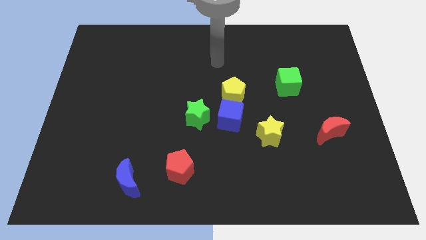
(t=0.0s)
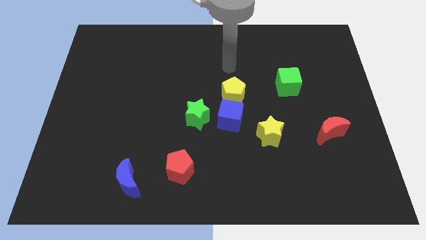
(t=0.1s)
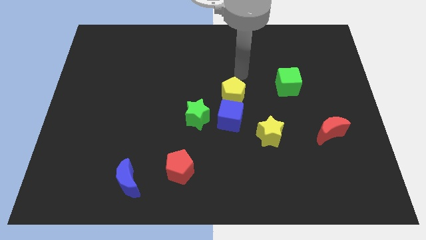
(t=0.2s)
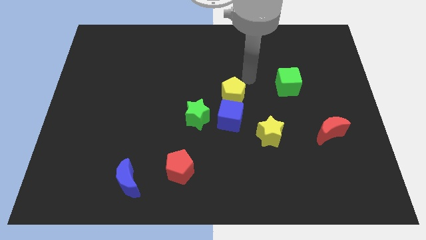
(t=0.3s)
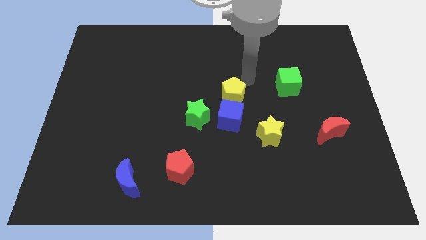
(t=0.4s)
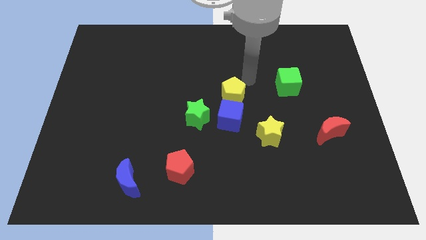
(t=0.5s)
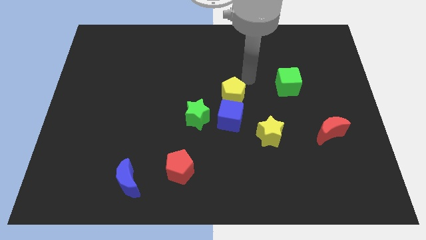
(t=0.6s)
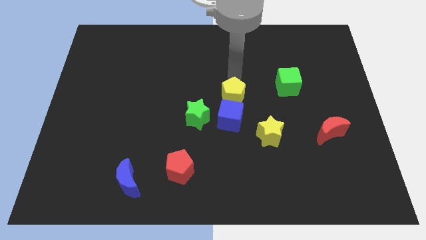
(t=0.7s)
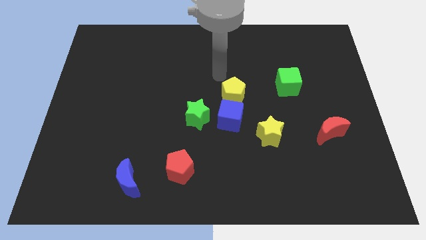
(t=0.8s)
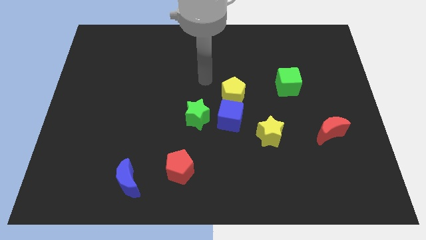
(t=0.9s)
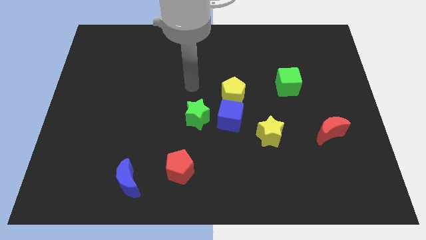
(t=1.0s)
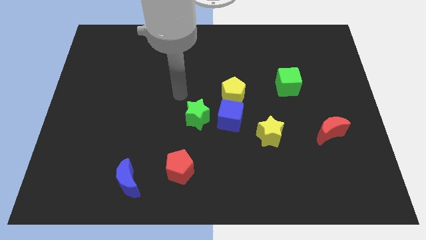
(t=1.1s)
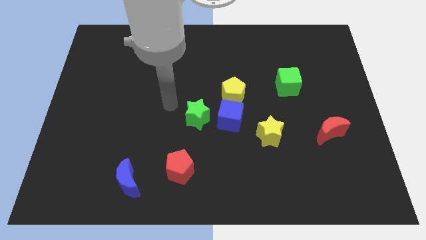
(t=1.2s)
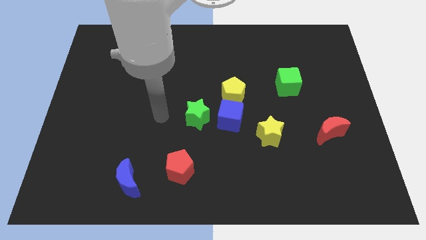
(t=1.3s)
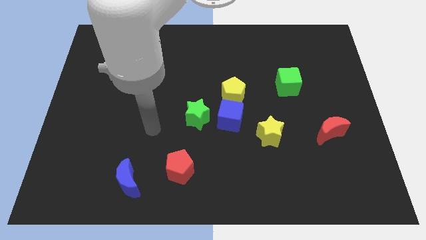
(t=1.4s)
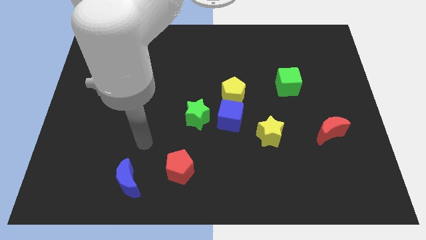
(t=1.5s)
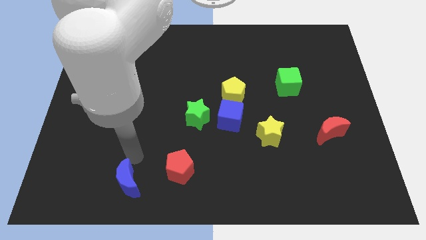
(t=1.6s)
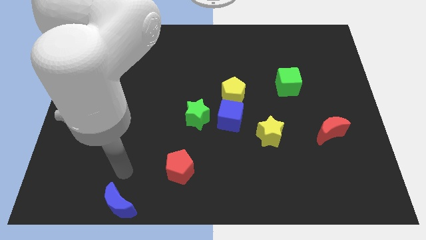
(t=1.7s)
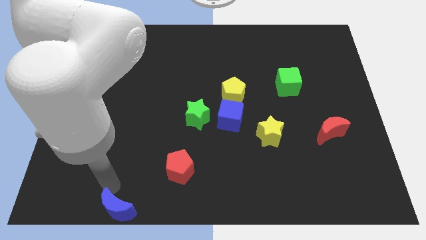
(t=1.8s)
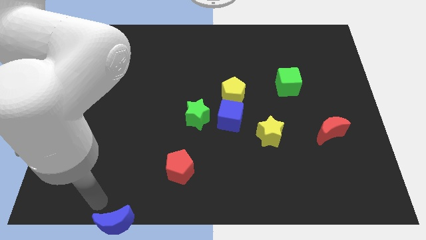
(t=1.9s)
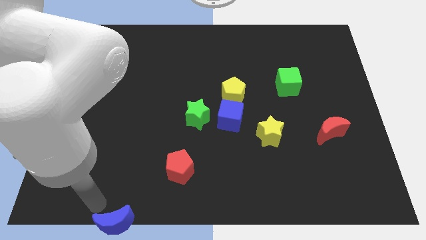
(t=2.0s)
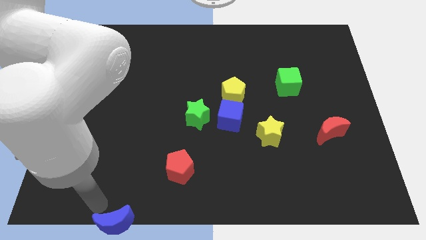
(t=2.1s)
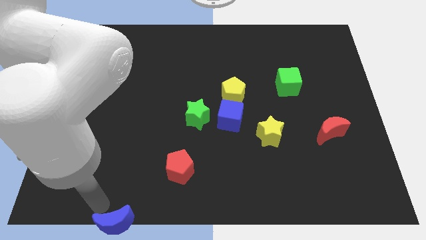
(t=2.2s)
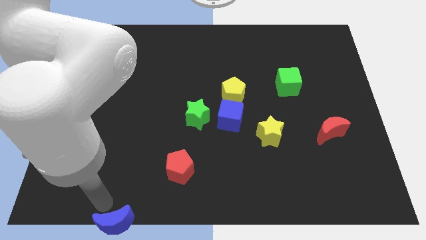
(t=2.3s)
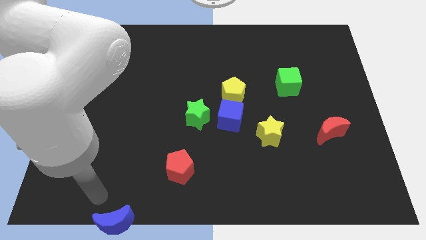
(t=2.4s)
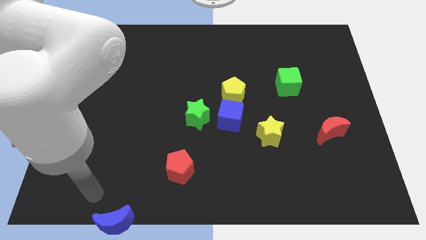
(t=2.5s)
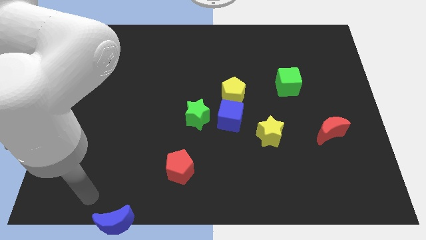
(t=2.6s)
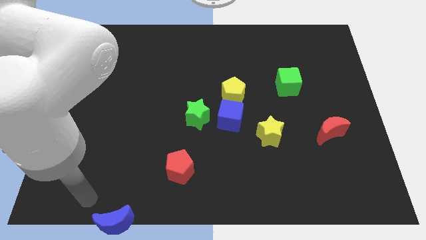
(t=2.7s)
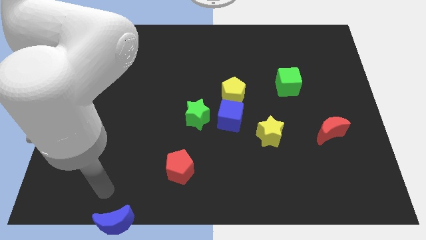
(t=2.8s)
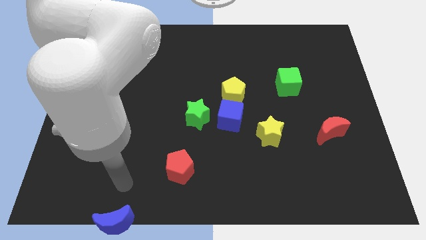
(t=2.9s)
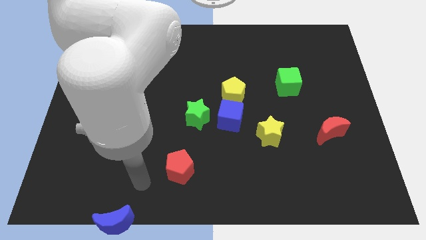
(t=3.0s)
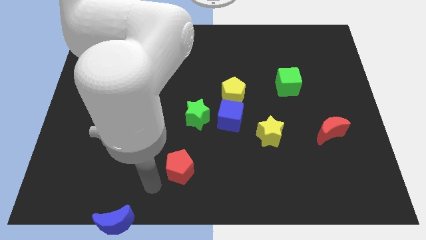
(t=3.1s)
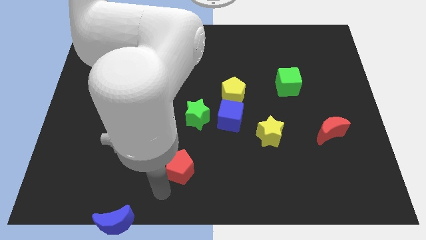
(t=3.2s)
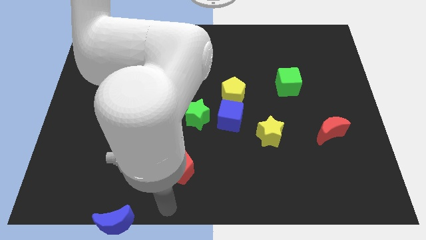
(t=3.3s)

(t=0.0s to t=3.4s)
point your arm below red pentagon

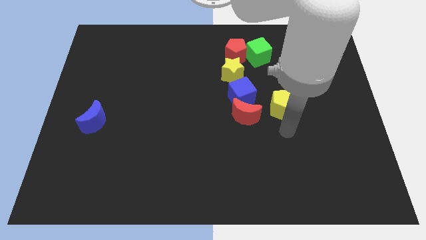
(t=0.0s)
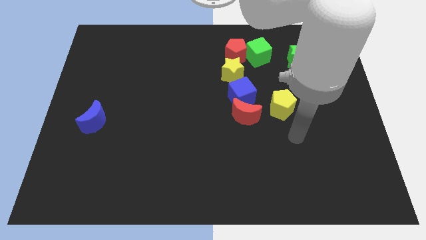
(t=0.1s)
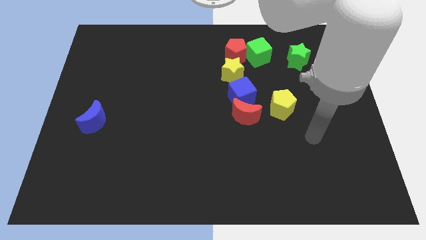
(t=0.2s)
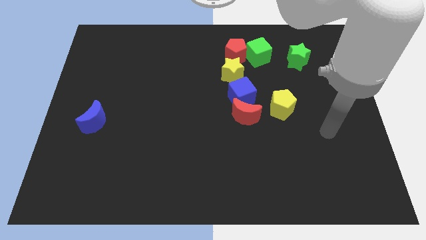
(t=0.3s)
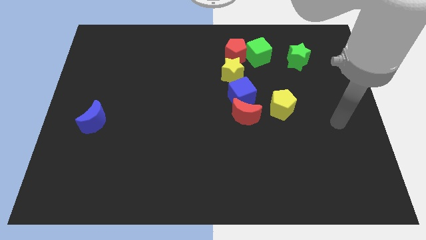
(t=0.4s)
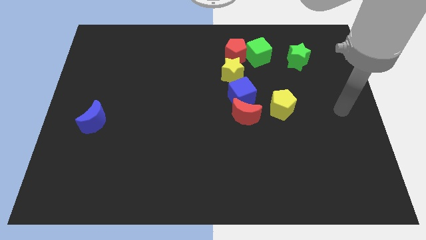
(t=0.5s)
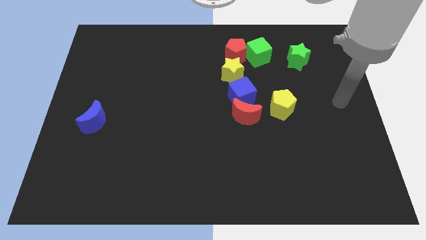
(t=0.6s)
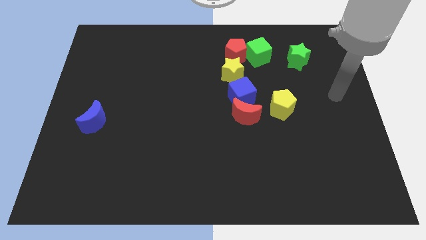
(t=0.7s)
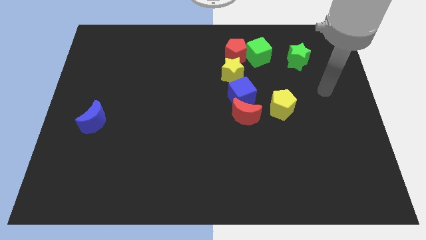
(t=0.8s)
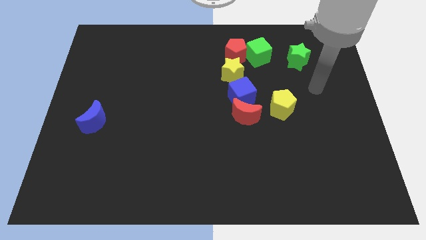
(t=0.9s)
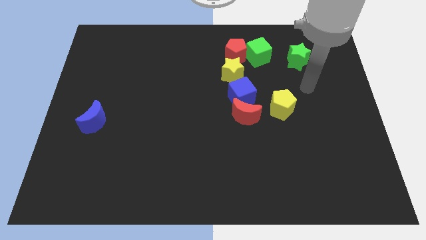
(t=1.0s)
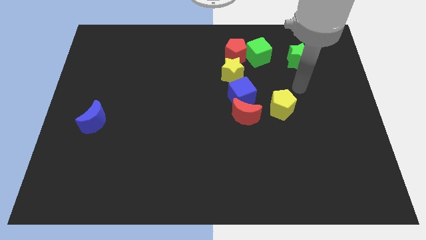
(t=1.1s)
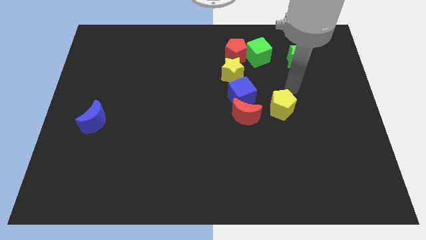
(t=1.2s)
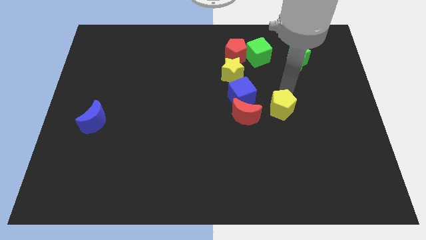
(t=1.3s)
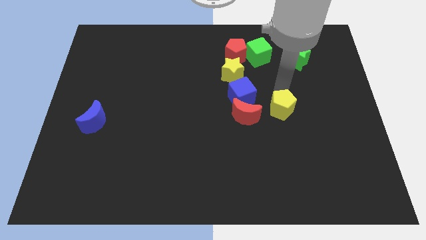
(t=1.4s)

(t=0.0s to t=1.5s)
point your arm at the top of the yellow pentagon

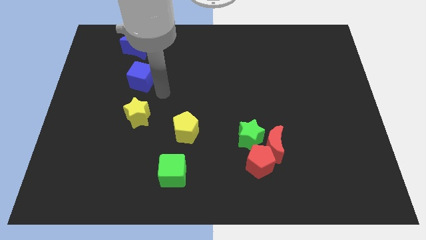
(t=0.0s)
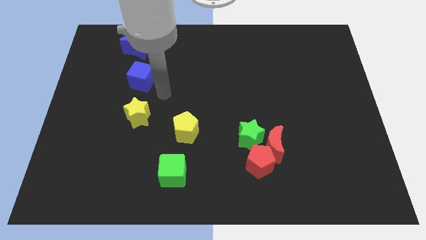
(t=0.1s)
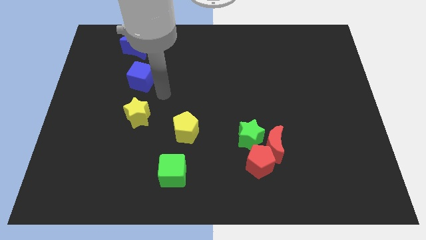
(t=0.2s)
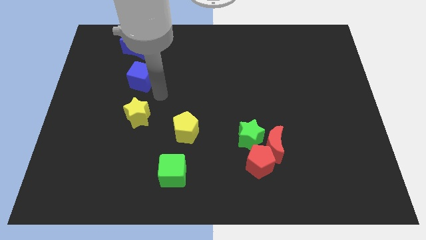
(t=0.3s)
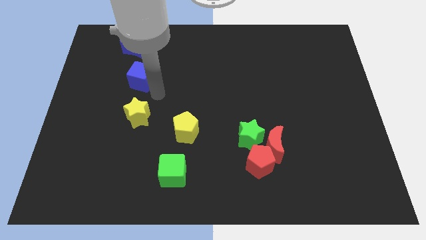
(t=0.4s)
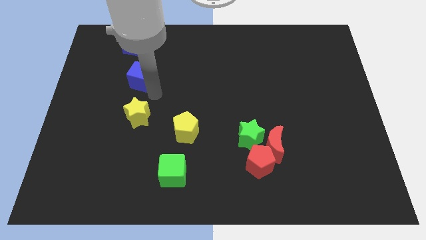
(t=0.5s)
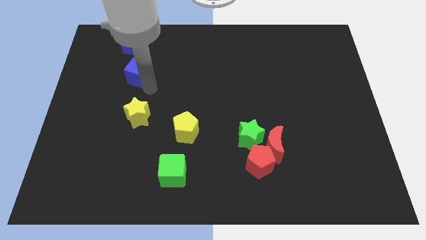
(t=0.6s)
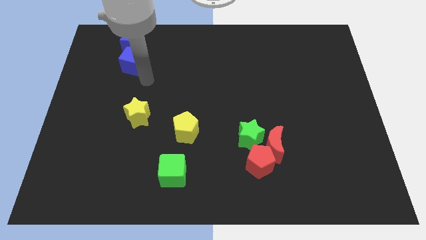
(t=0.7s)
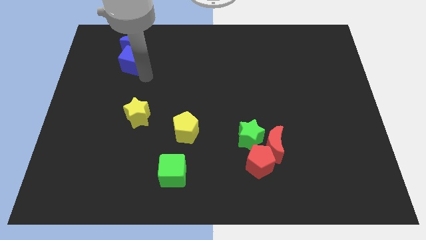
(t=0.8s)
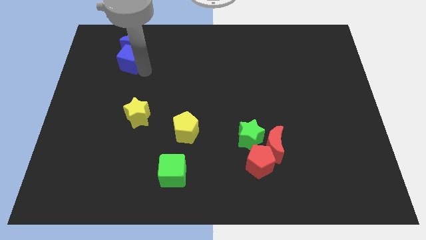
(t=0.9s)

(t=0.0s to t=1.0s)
push the blue cube below the blue crescent

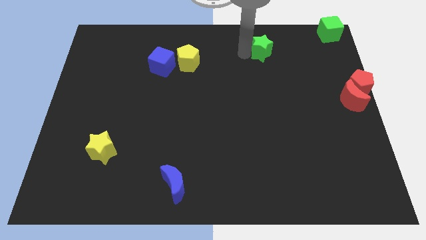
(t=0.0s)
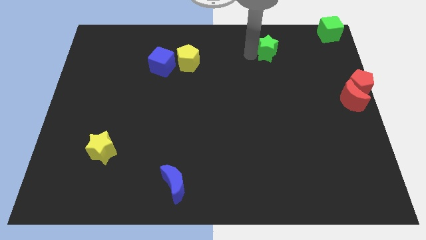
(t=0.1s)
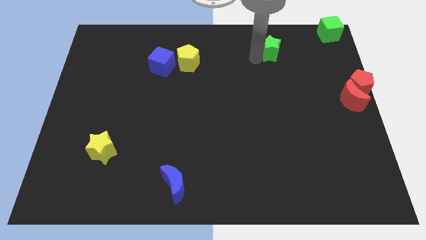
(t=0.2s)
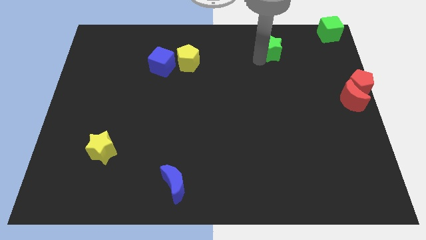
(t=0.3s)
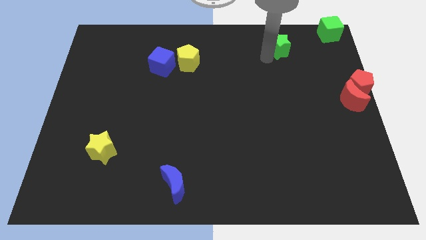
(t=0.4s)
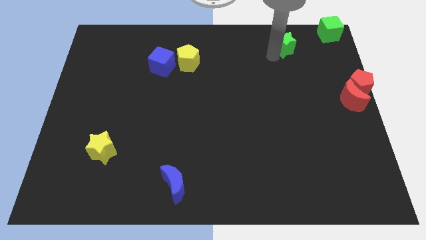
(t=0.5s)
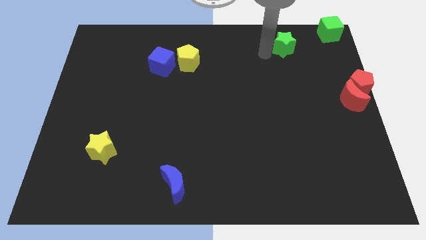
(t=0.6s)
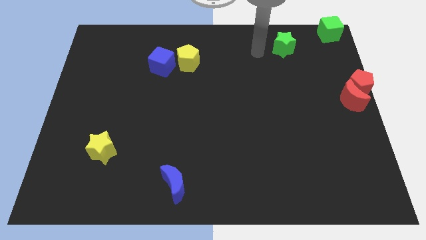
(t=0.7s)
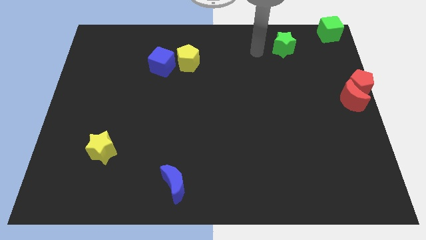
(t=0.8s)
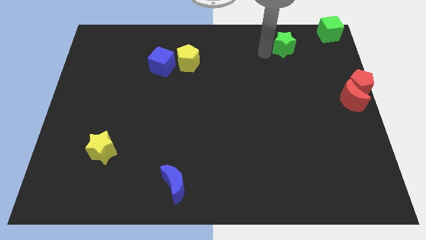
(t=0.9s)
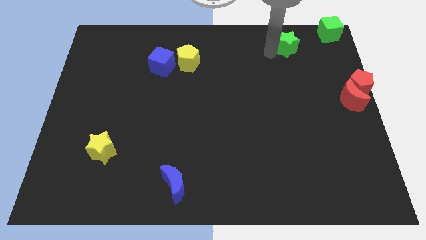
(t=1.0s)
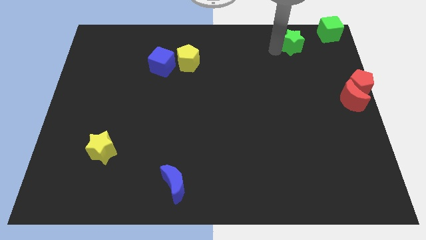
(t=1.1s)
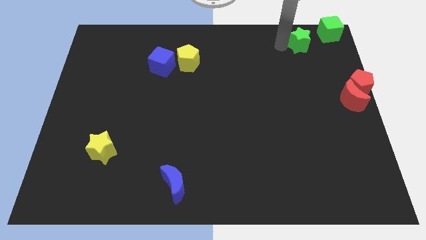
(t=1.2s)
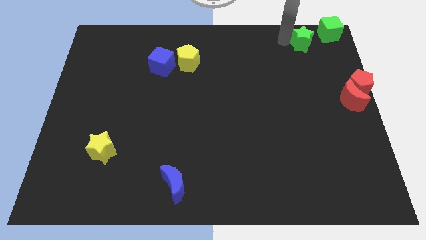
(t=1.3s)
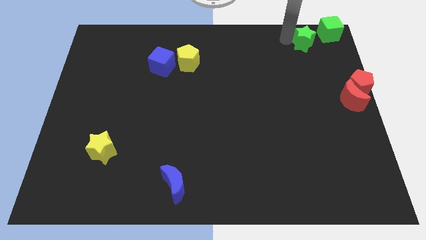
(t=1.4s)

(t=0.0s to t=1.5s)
move the green star close to the green cube

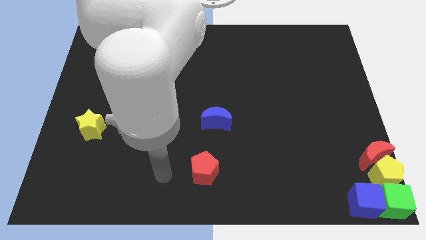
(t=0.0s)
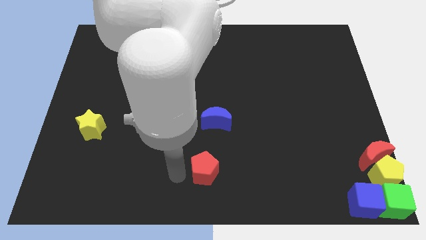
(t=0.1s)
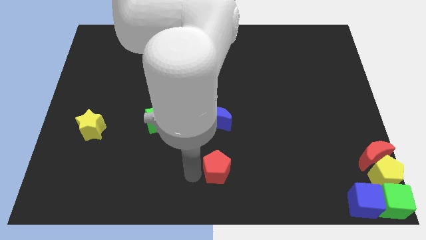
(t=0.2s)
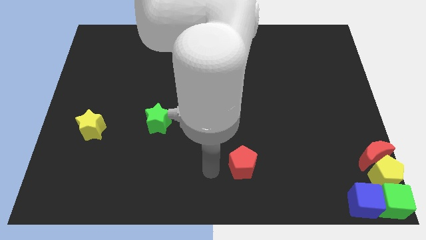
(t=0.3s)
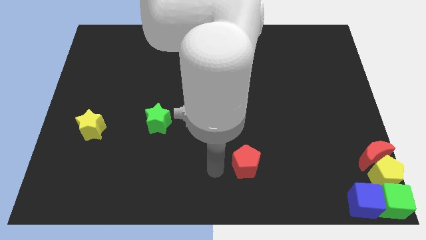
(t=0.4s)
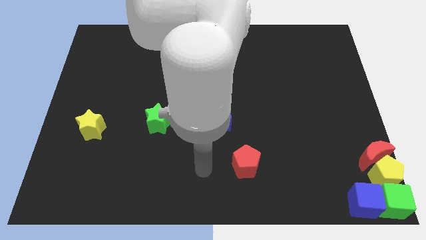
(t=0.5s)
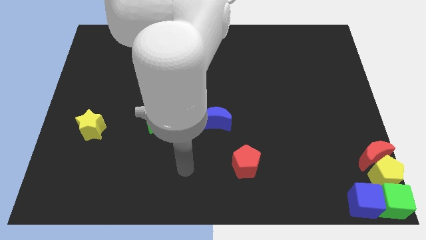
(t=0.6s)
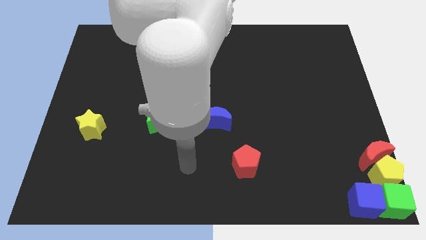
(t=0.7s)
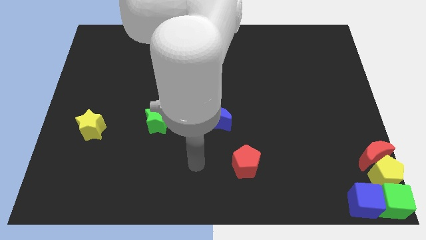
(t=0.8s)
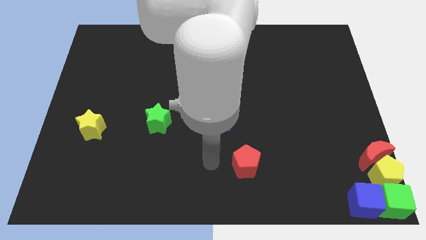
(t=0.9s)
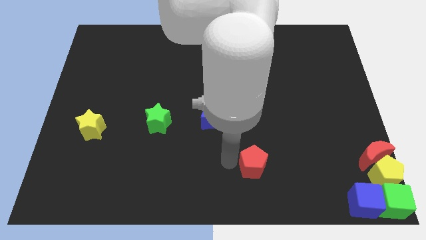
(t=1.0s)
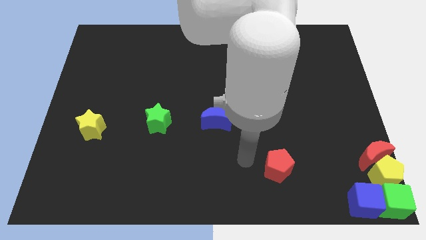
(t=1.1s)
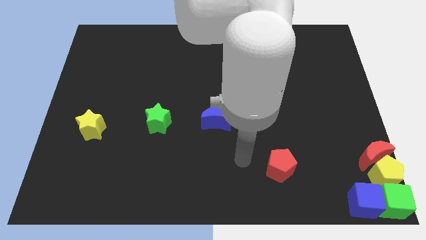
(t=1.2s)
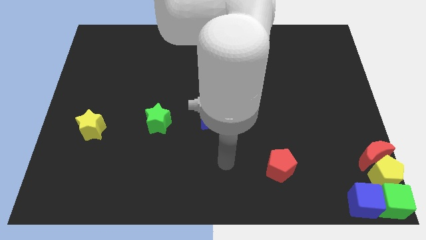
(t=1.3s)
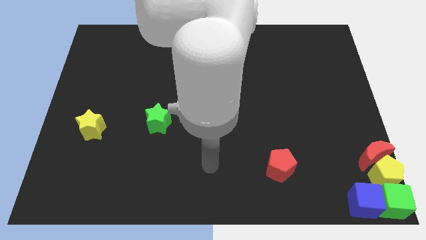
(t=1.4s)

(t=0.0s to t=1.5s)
push the red pentagon towards the group of blocks
